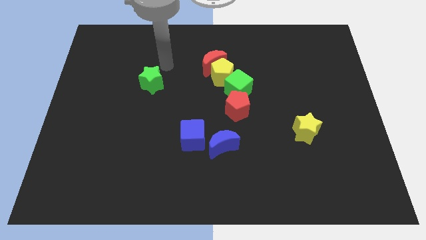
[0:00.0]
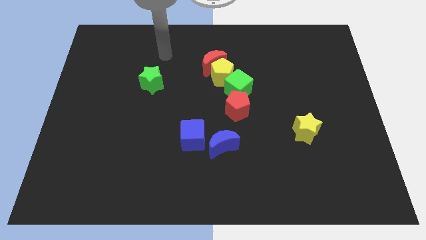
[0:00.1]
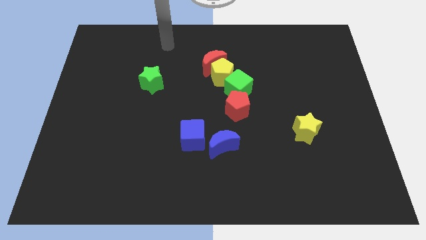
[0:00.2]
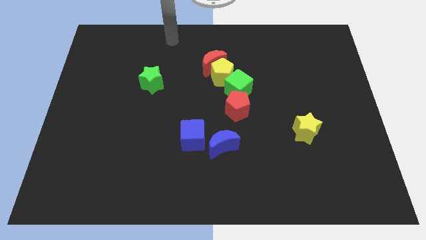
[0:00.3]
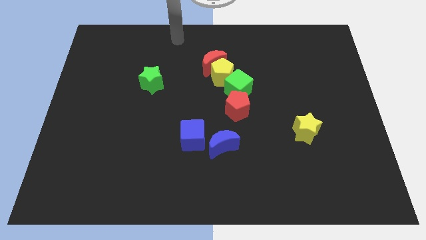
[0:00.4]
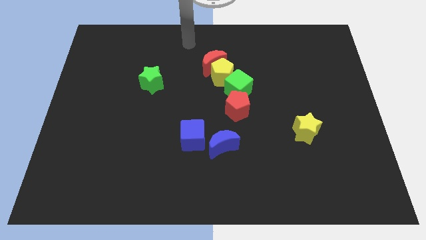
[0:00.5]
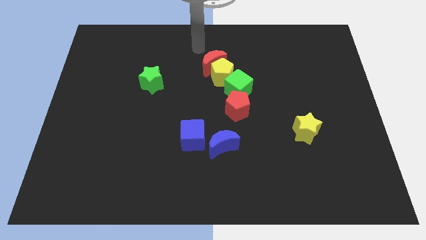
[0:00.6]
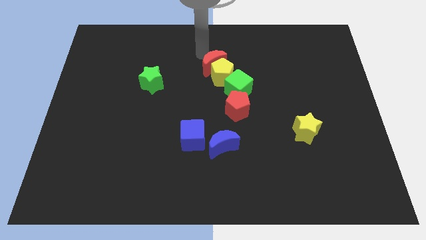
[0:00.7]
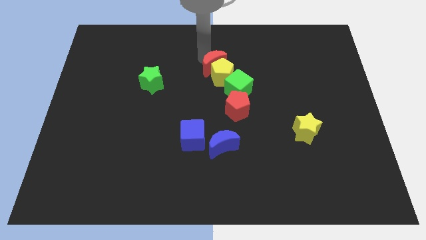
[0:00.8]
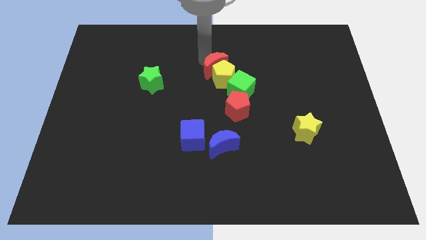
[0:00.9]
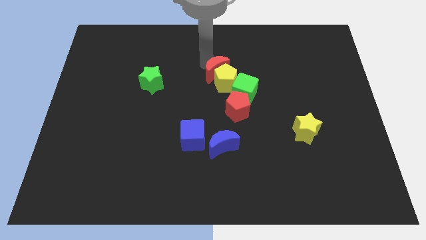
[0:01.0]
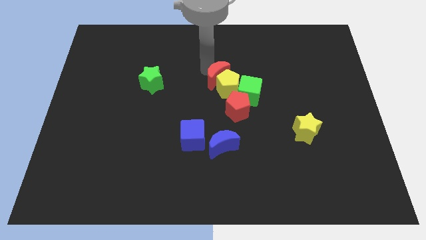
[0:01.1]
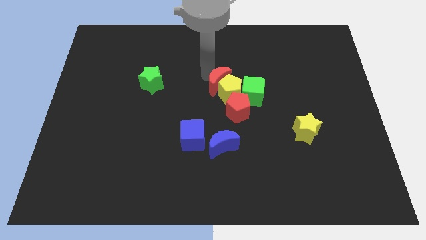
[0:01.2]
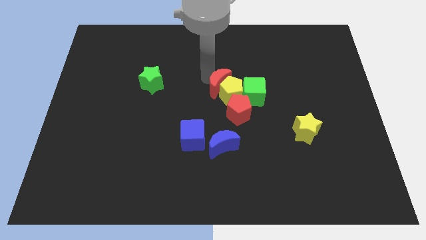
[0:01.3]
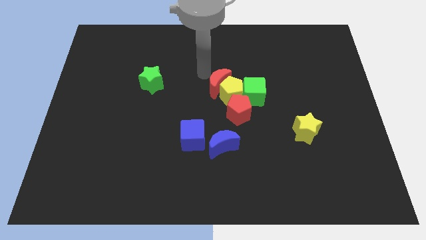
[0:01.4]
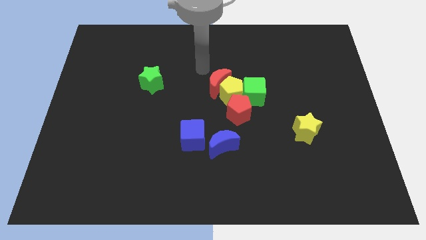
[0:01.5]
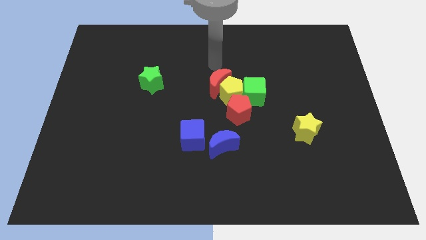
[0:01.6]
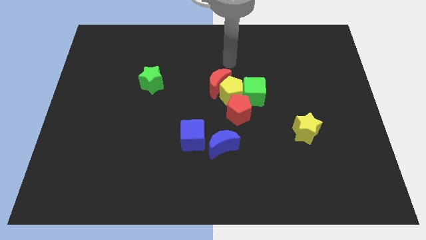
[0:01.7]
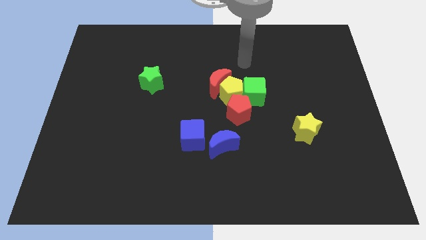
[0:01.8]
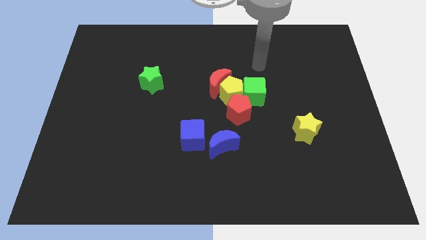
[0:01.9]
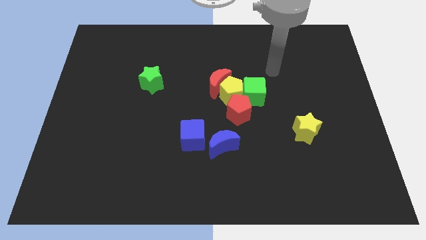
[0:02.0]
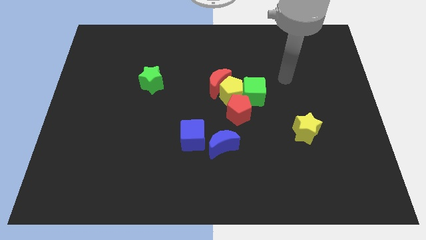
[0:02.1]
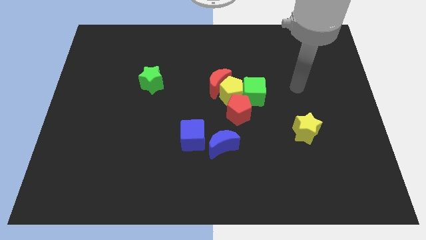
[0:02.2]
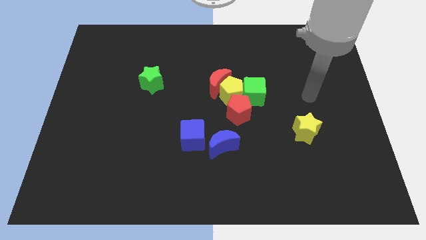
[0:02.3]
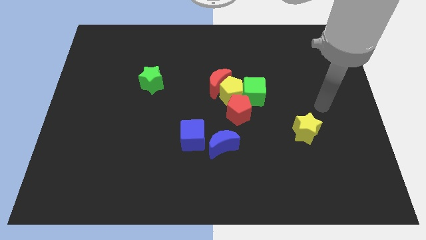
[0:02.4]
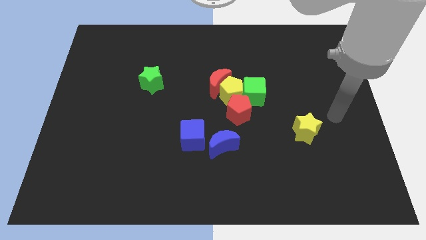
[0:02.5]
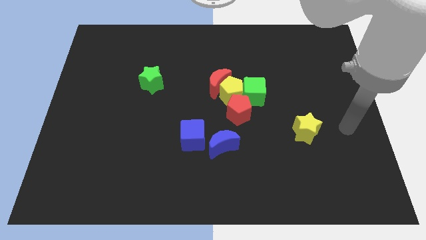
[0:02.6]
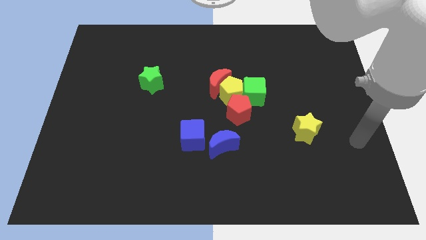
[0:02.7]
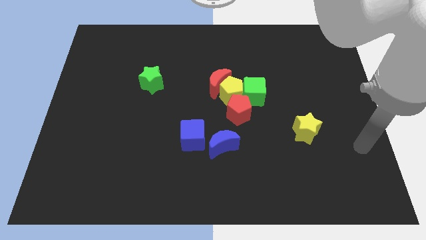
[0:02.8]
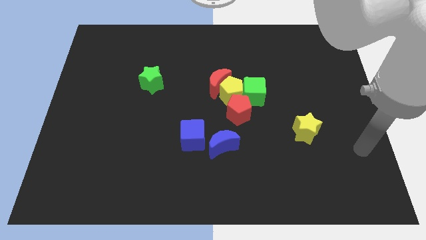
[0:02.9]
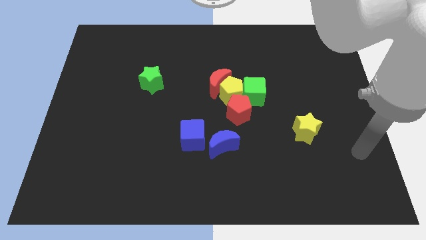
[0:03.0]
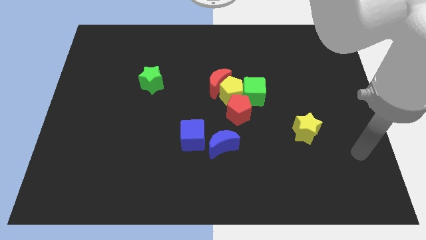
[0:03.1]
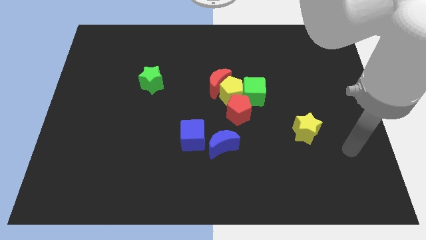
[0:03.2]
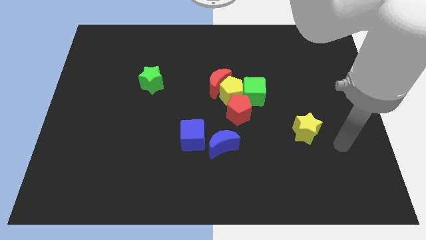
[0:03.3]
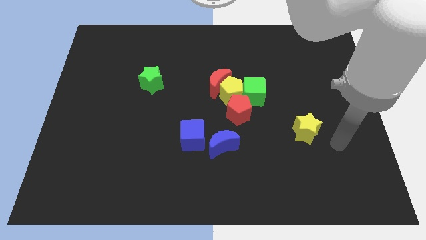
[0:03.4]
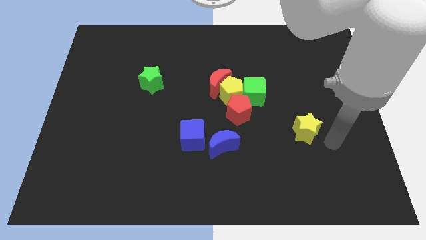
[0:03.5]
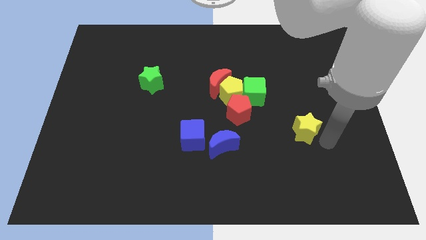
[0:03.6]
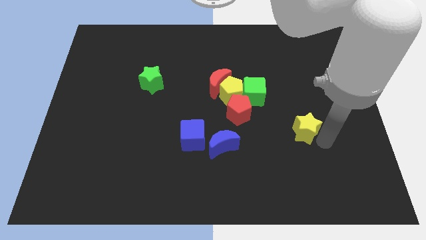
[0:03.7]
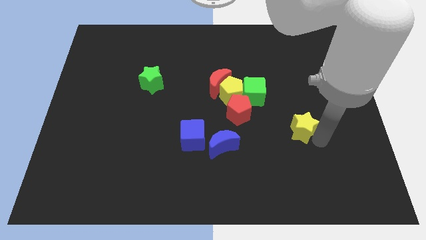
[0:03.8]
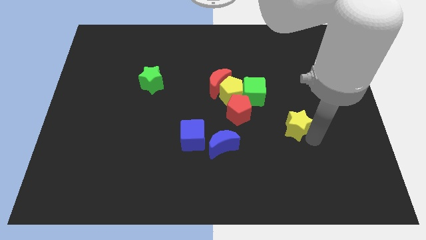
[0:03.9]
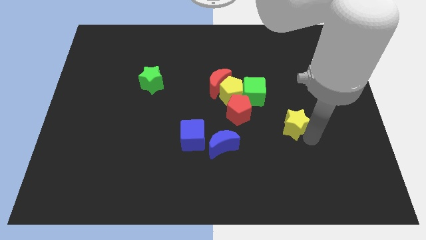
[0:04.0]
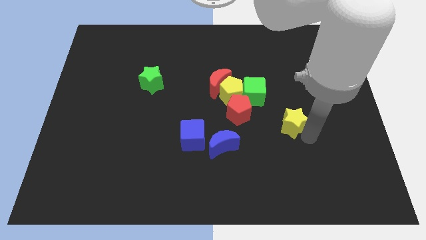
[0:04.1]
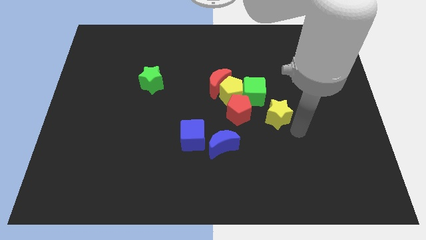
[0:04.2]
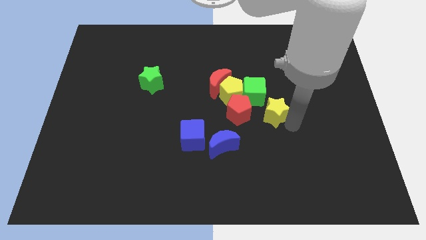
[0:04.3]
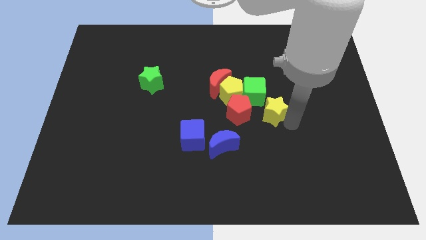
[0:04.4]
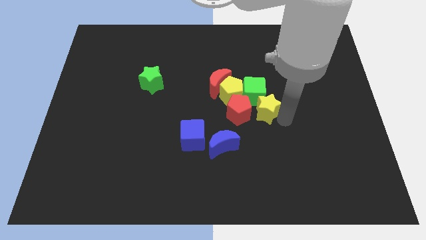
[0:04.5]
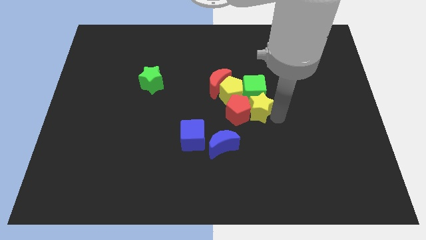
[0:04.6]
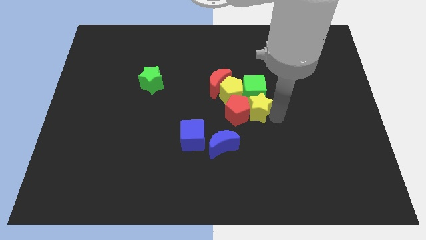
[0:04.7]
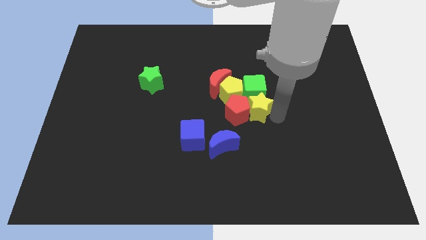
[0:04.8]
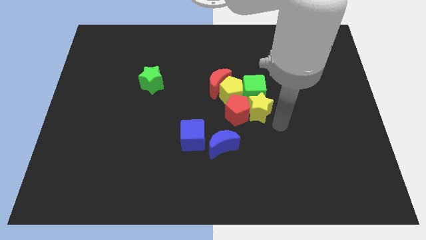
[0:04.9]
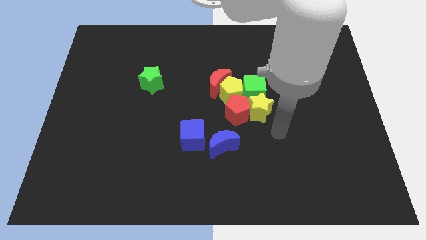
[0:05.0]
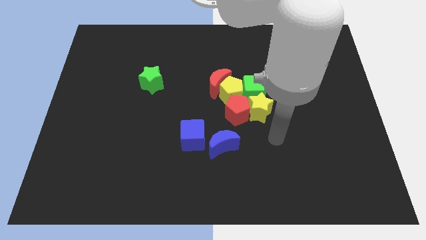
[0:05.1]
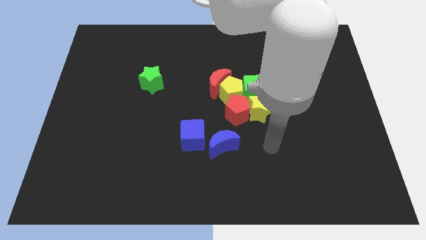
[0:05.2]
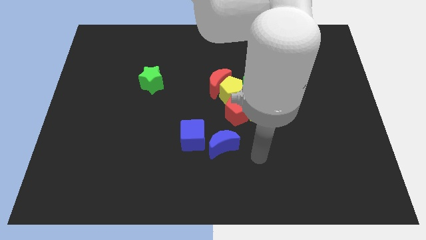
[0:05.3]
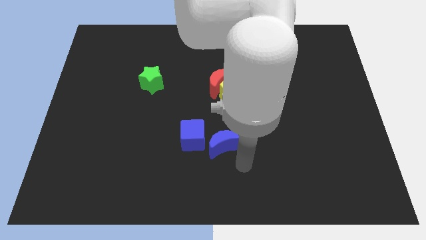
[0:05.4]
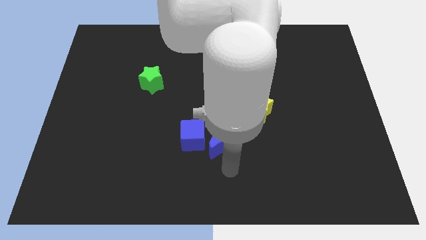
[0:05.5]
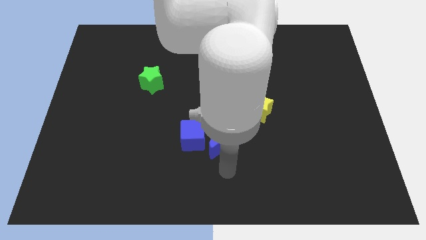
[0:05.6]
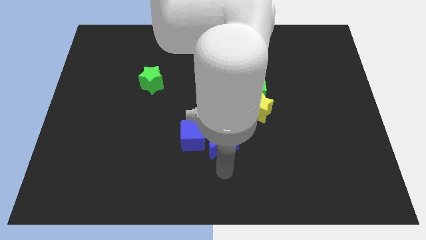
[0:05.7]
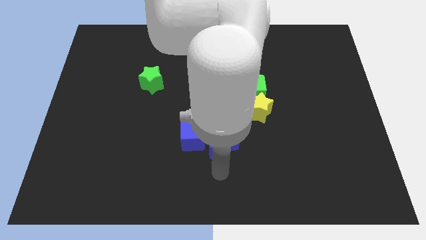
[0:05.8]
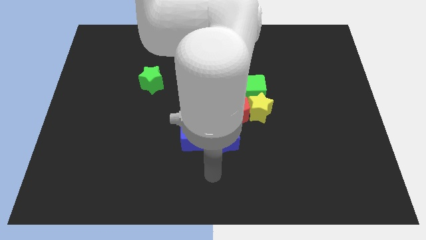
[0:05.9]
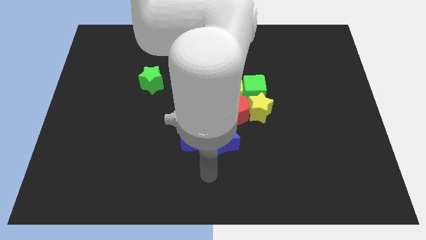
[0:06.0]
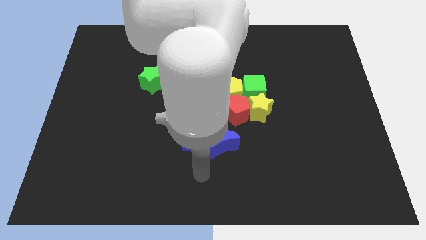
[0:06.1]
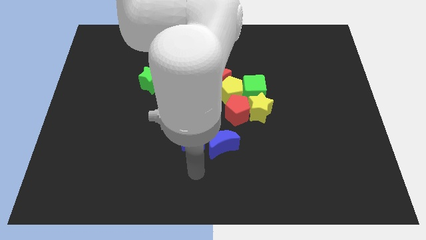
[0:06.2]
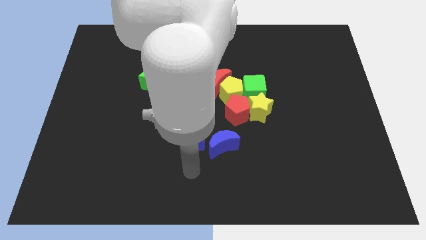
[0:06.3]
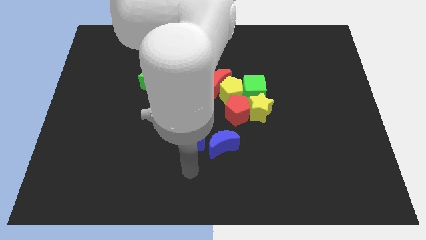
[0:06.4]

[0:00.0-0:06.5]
push the yellow star into the group of blocks

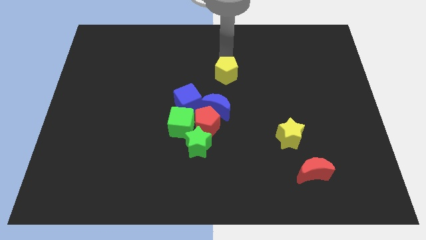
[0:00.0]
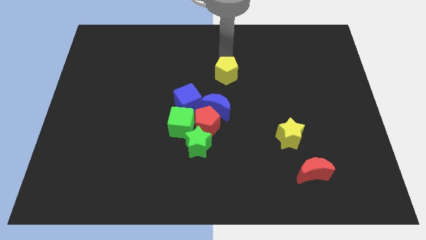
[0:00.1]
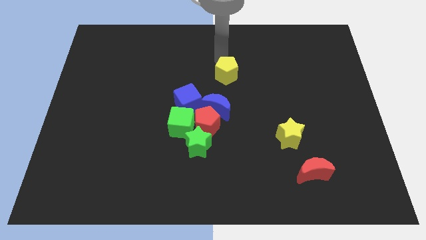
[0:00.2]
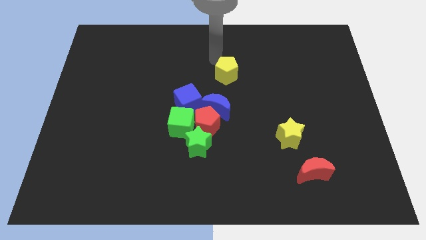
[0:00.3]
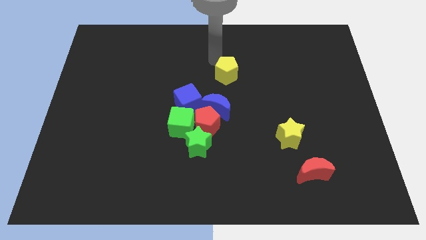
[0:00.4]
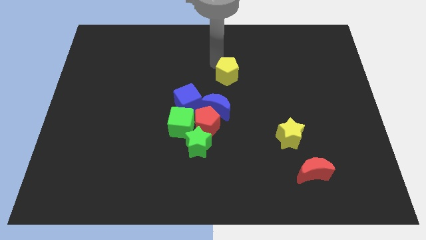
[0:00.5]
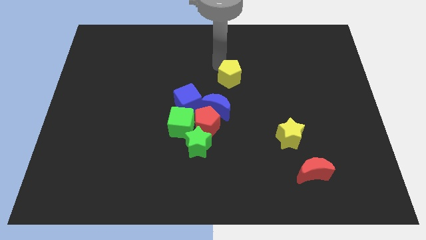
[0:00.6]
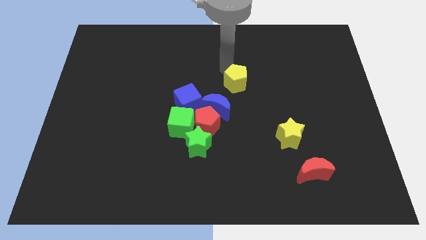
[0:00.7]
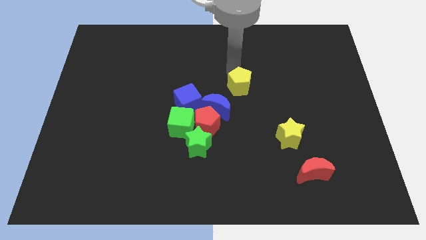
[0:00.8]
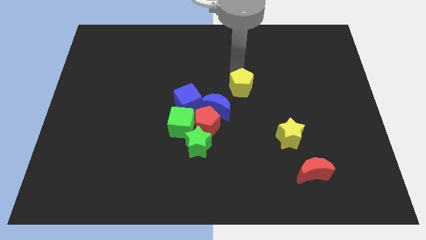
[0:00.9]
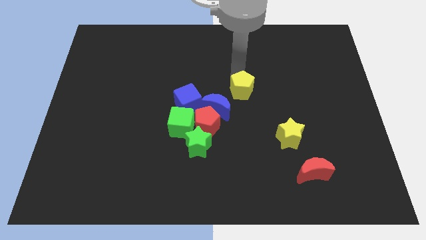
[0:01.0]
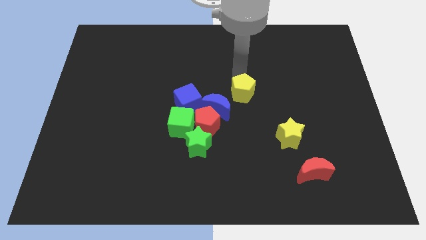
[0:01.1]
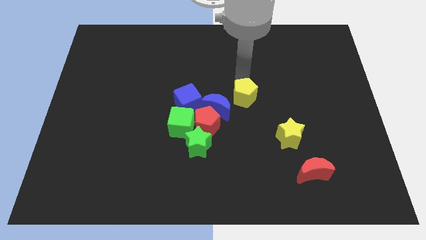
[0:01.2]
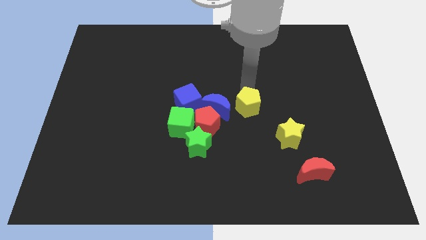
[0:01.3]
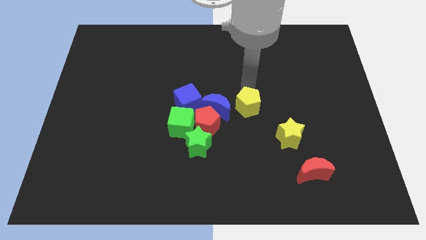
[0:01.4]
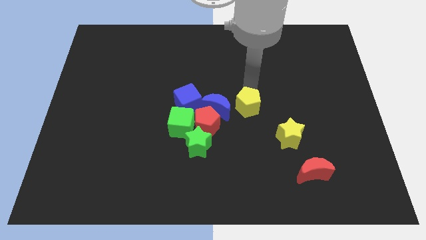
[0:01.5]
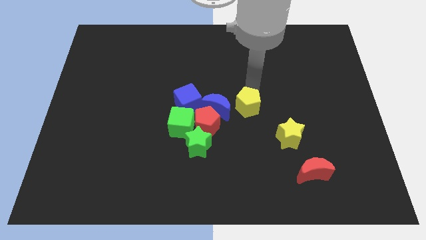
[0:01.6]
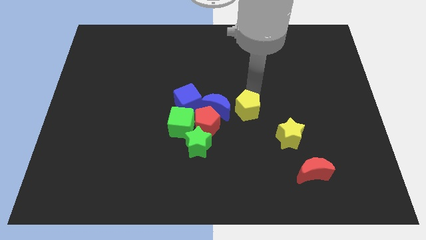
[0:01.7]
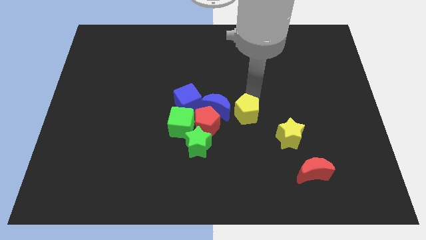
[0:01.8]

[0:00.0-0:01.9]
push the yellow pentagon right side of the blue moon

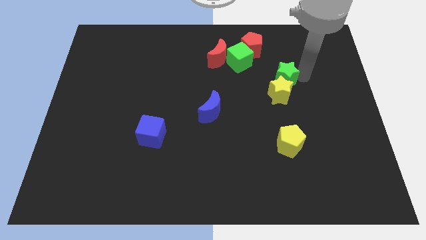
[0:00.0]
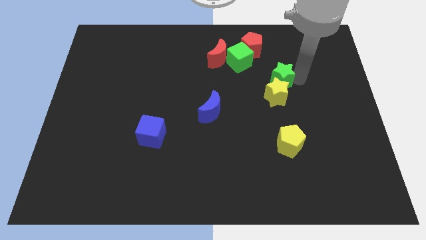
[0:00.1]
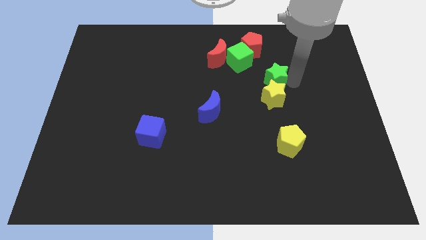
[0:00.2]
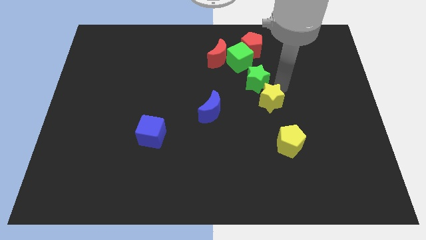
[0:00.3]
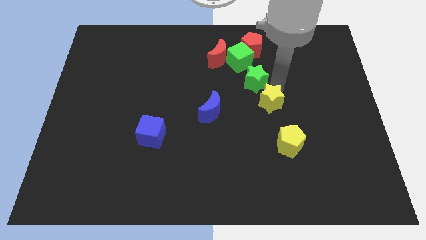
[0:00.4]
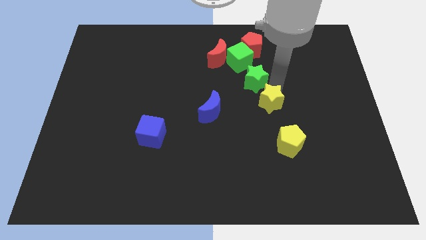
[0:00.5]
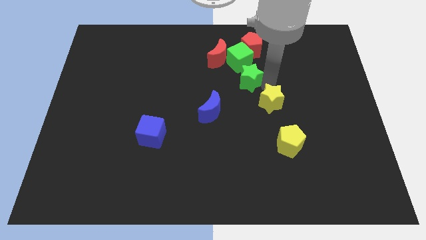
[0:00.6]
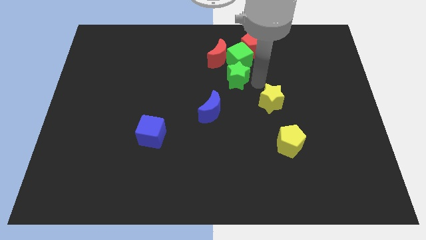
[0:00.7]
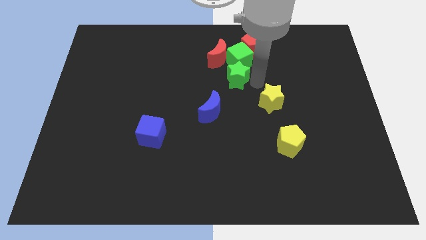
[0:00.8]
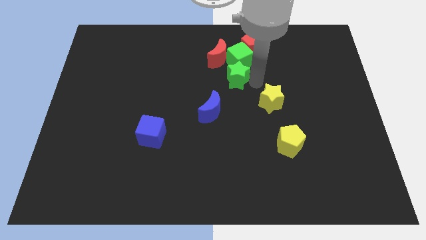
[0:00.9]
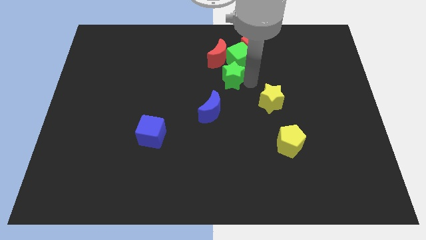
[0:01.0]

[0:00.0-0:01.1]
place green star below the green cube
